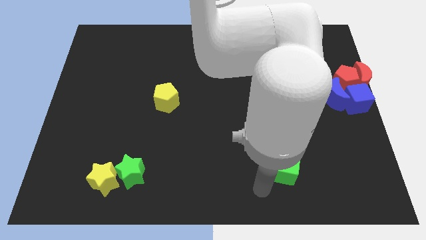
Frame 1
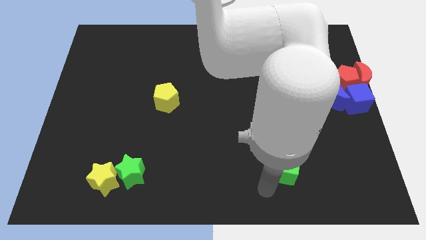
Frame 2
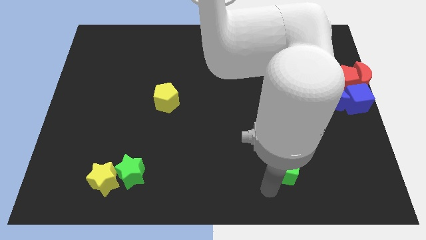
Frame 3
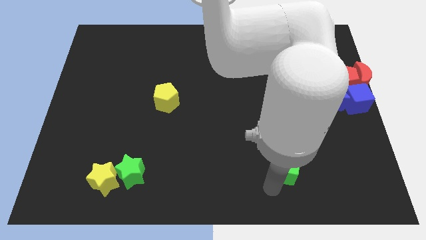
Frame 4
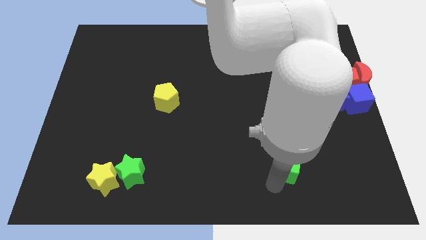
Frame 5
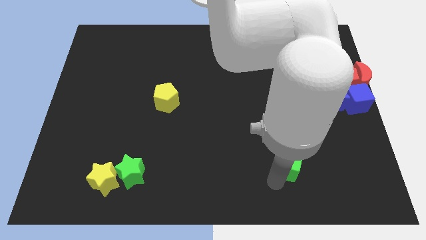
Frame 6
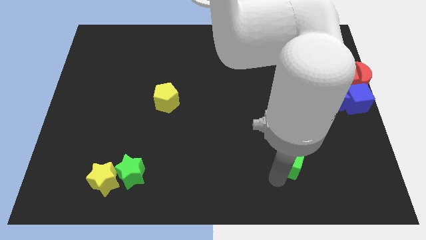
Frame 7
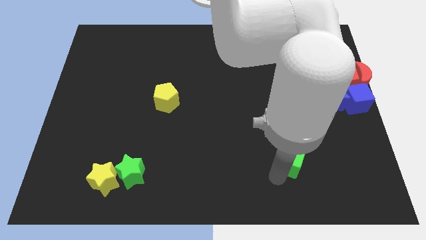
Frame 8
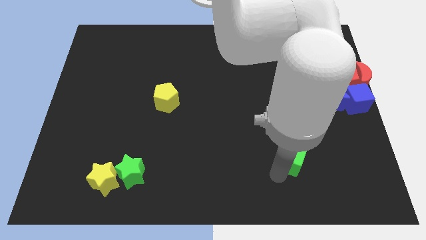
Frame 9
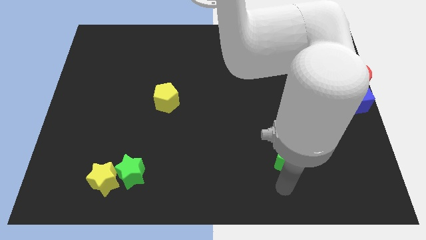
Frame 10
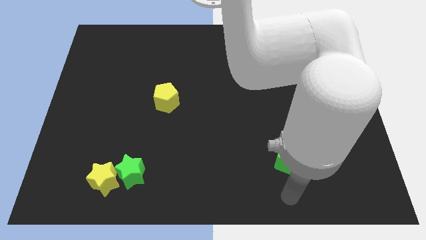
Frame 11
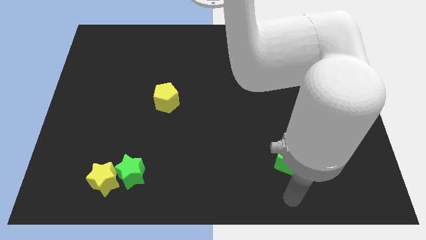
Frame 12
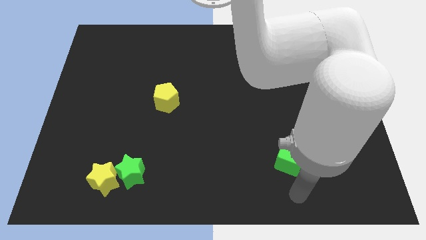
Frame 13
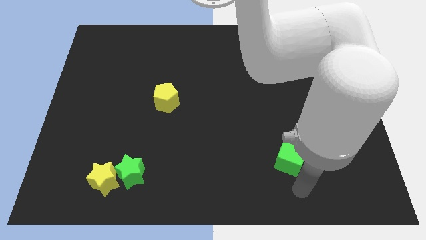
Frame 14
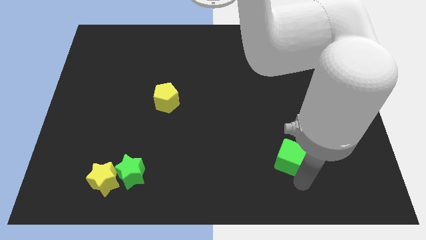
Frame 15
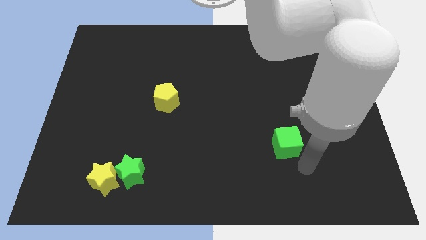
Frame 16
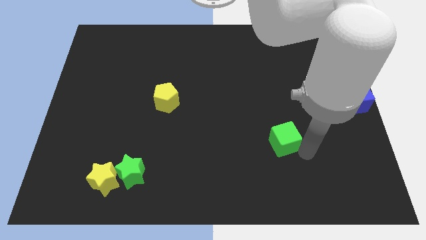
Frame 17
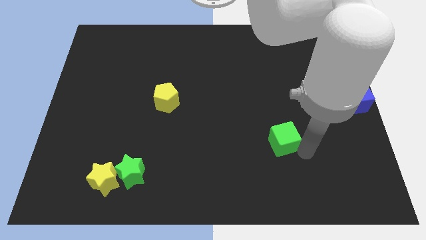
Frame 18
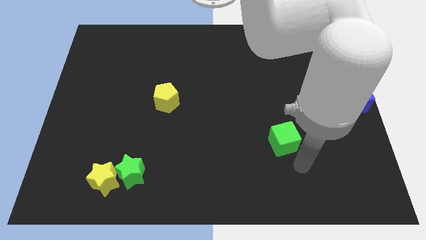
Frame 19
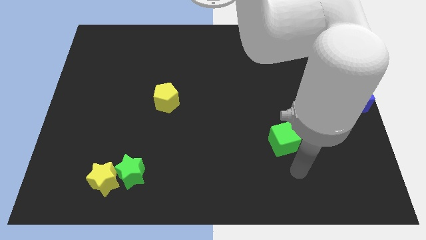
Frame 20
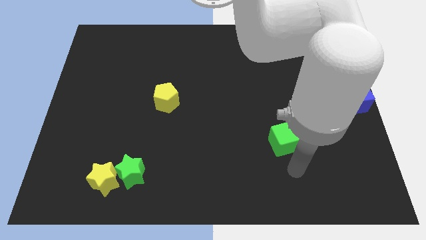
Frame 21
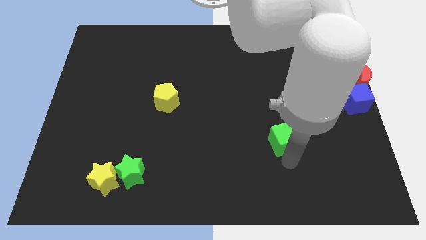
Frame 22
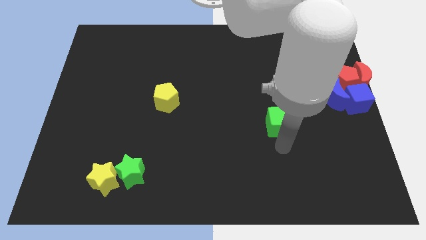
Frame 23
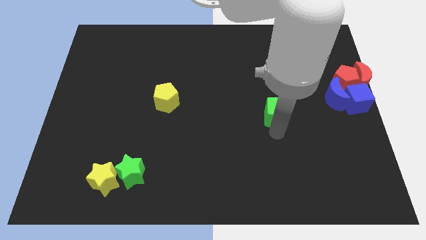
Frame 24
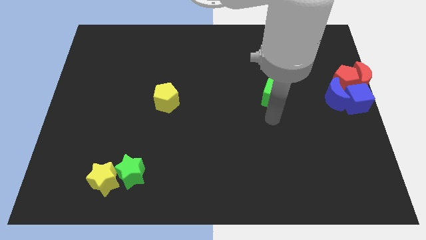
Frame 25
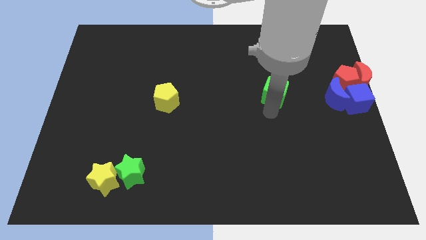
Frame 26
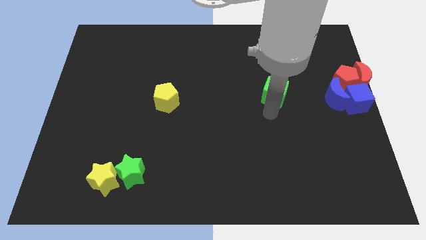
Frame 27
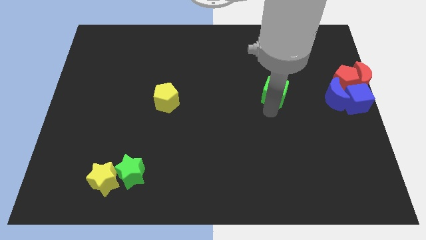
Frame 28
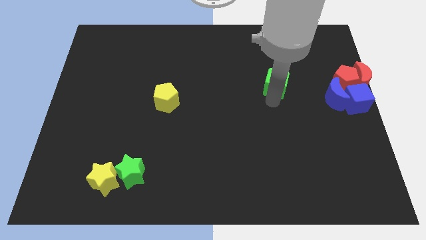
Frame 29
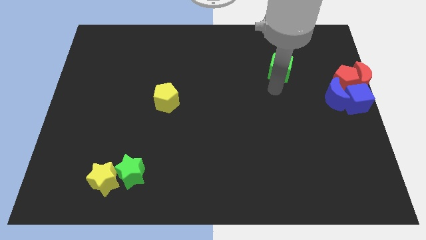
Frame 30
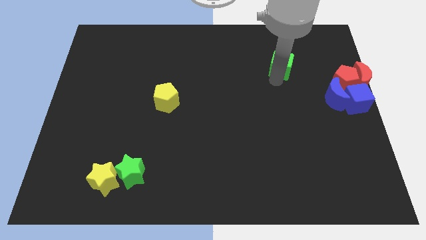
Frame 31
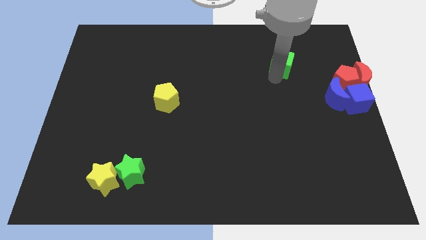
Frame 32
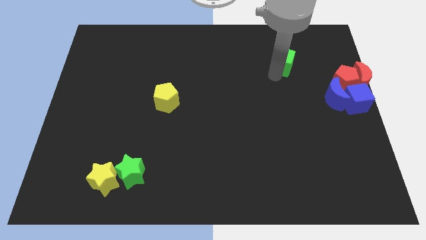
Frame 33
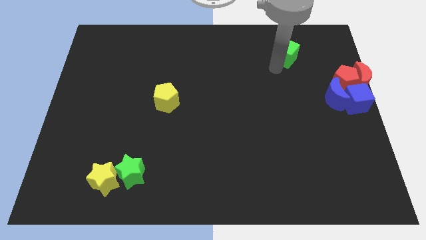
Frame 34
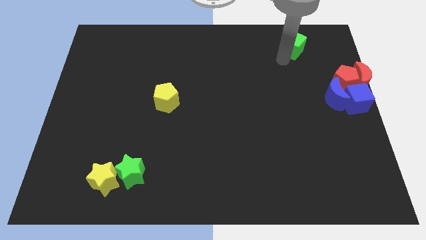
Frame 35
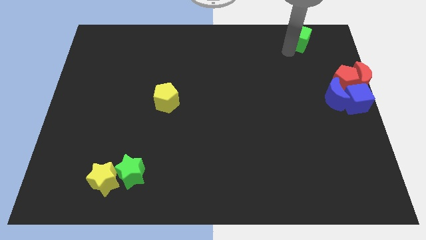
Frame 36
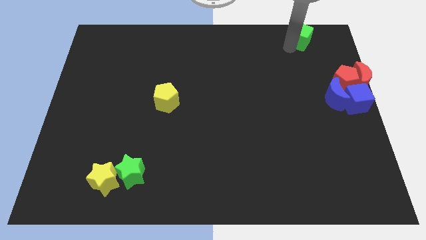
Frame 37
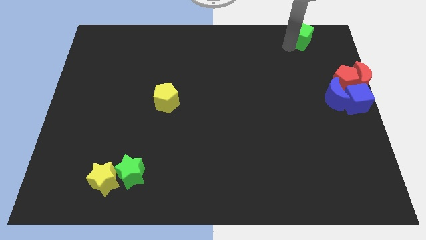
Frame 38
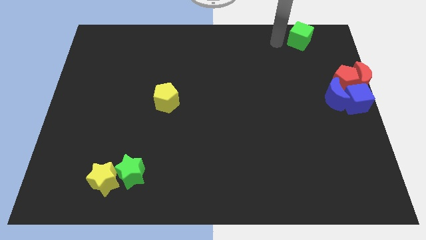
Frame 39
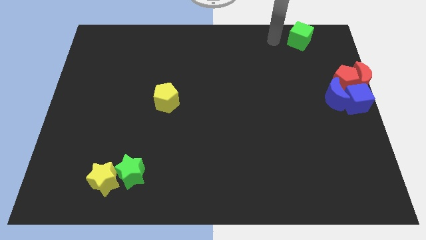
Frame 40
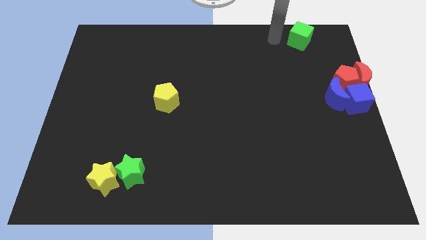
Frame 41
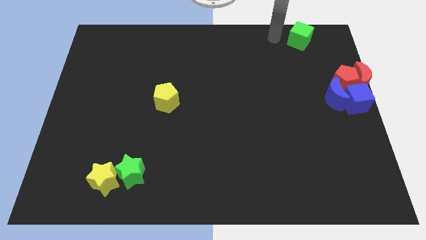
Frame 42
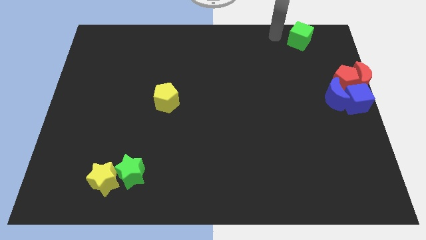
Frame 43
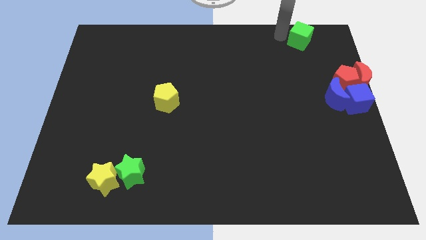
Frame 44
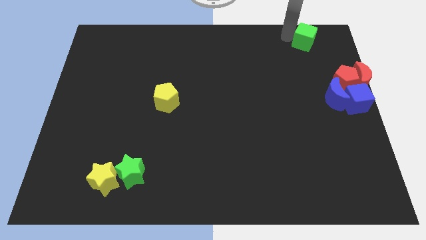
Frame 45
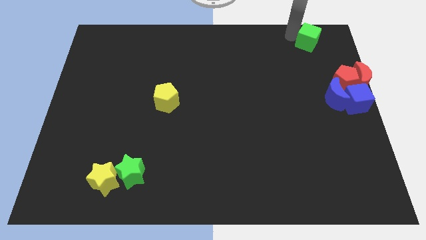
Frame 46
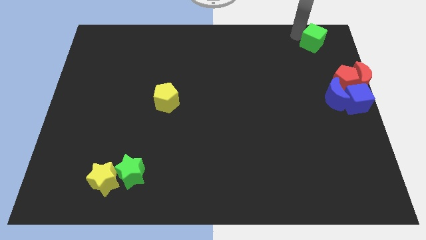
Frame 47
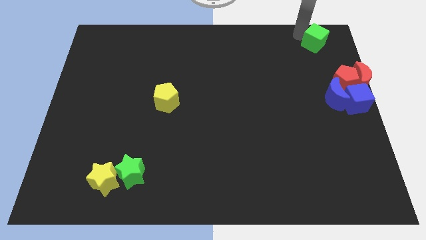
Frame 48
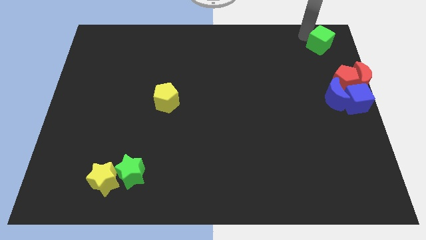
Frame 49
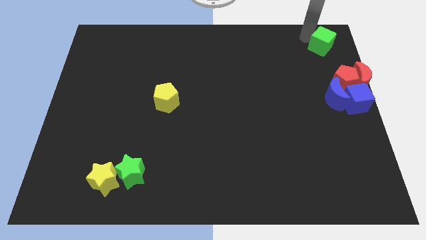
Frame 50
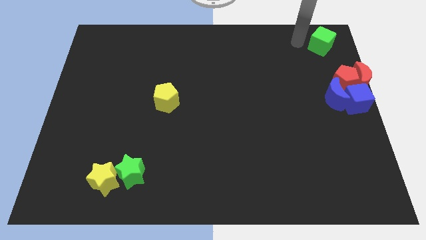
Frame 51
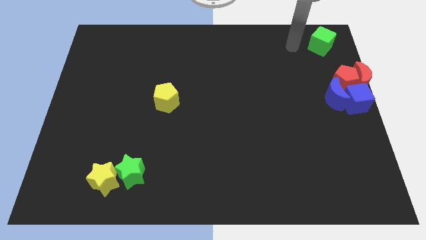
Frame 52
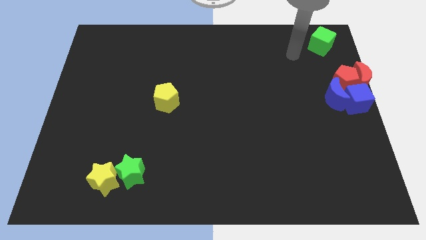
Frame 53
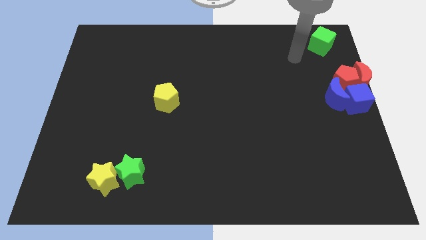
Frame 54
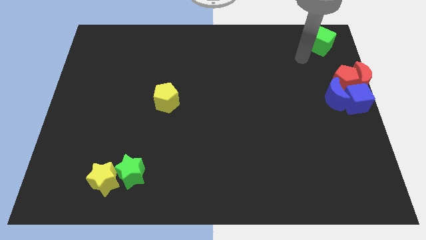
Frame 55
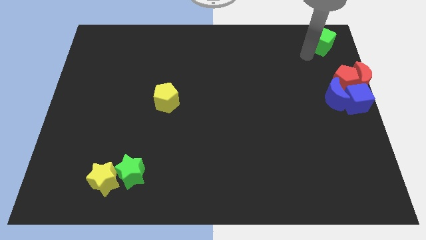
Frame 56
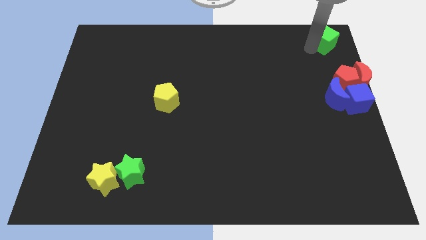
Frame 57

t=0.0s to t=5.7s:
move the green cube to the top right of the board

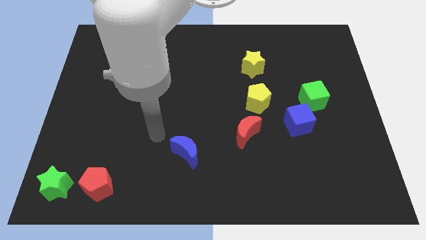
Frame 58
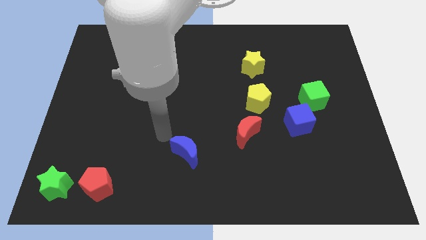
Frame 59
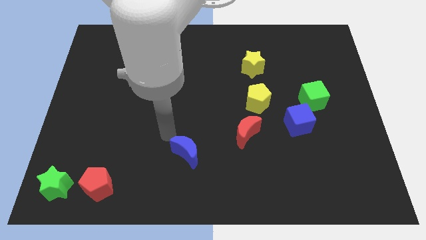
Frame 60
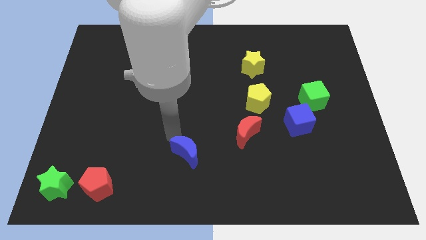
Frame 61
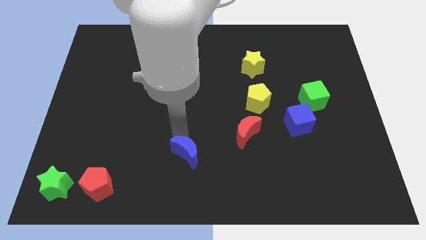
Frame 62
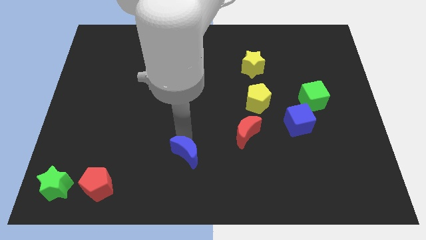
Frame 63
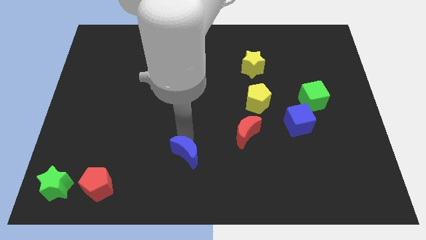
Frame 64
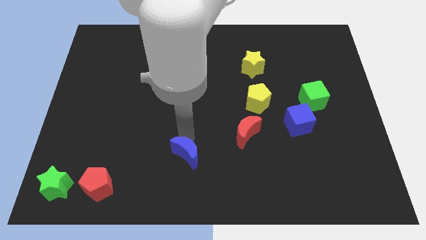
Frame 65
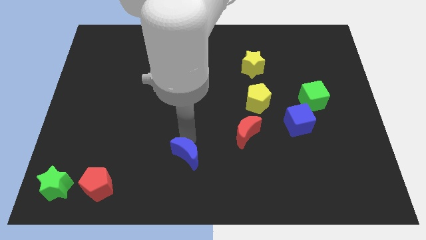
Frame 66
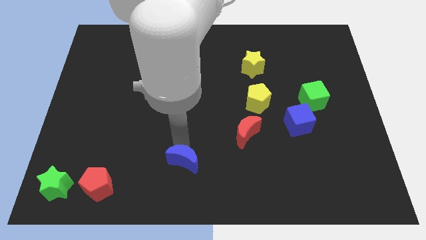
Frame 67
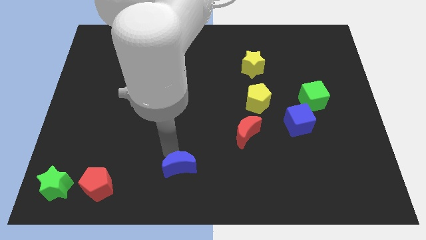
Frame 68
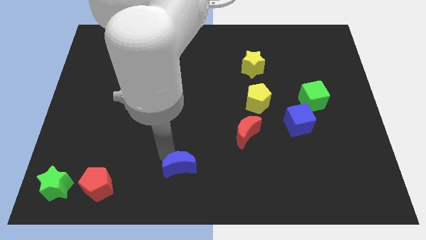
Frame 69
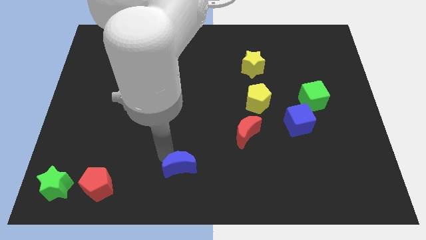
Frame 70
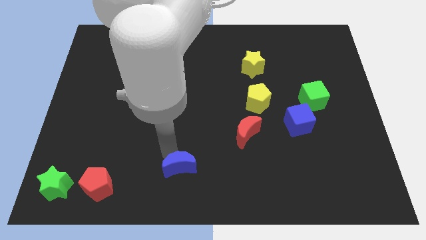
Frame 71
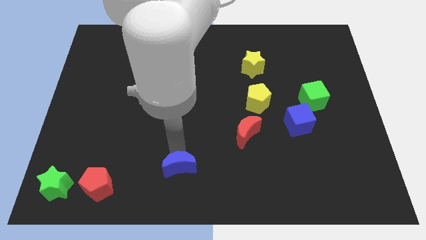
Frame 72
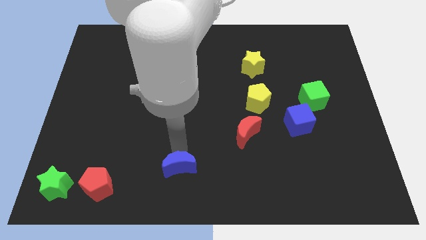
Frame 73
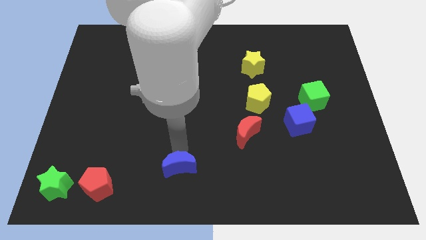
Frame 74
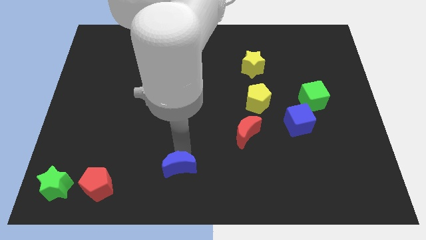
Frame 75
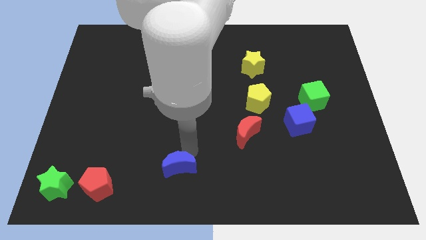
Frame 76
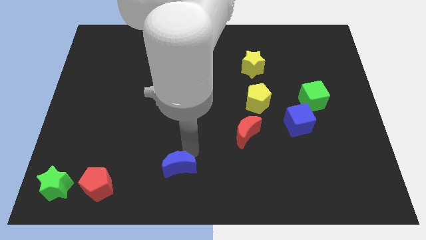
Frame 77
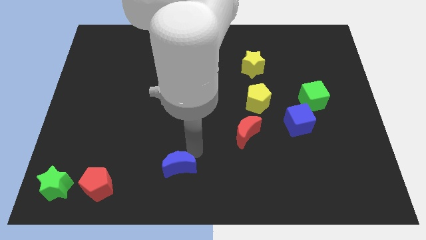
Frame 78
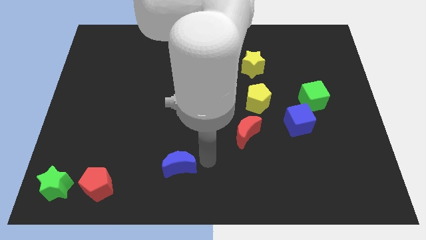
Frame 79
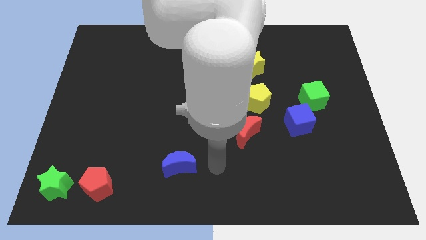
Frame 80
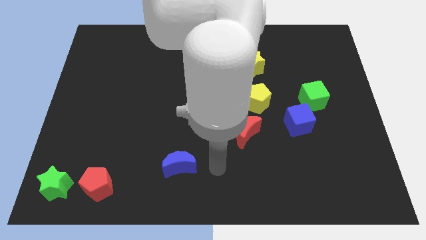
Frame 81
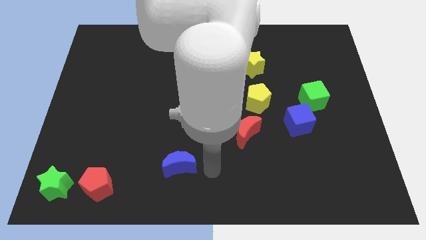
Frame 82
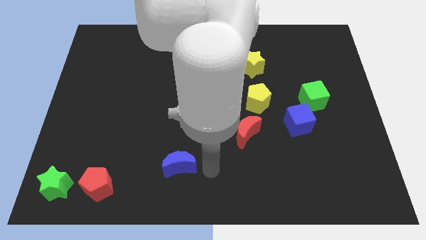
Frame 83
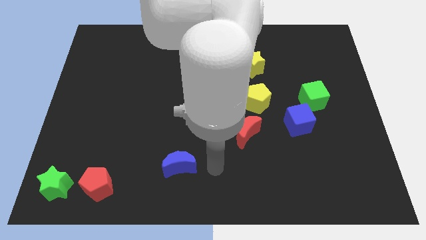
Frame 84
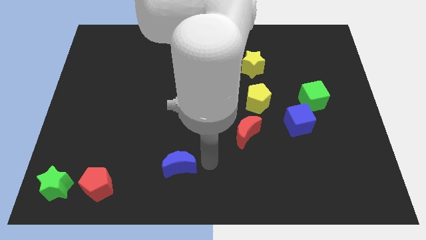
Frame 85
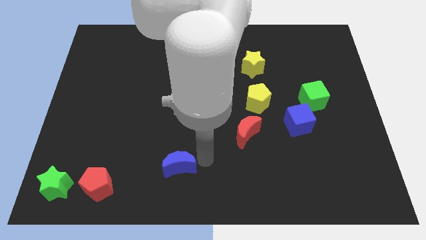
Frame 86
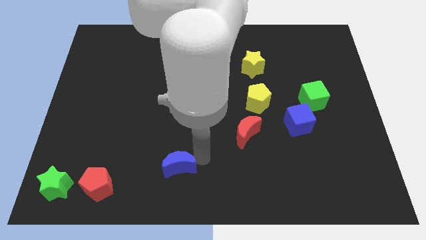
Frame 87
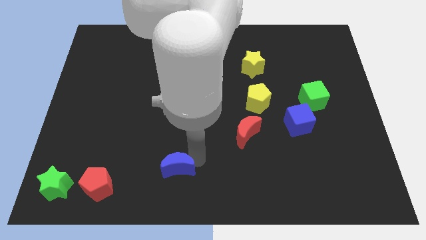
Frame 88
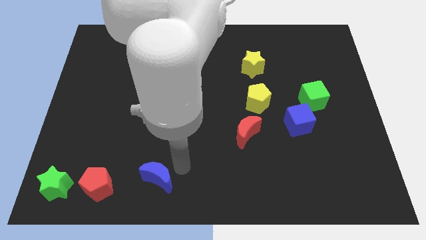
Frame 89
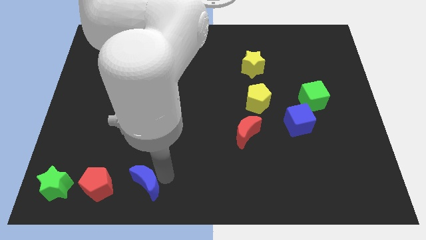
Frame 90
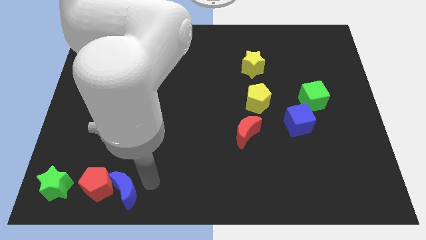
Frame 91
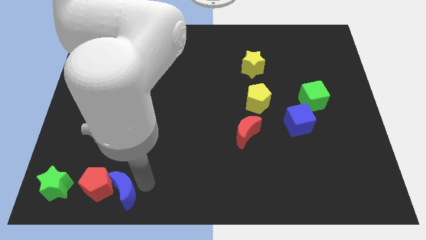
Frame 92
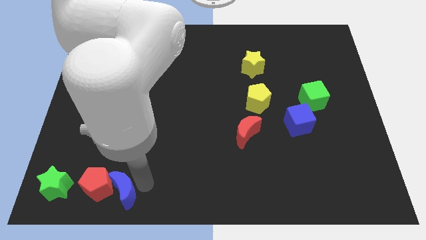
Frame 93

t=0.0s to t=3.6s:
push the blue crescent right to the red pentagon
